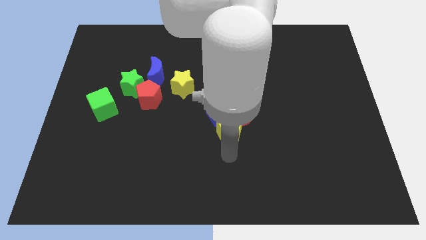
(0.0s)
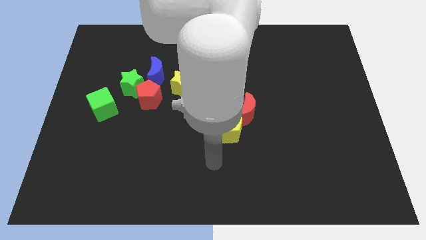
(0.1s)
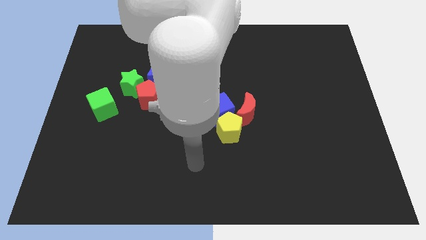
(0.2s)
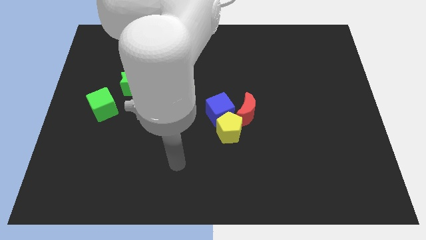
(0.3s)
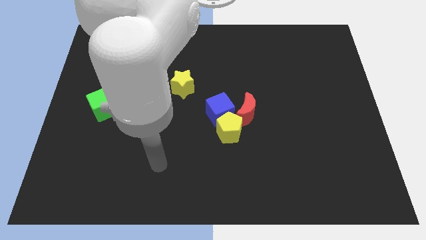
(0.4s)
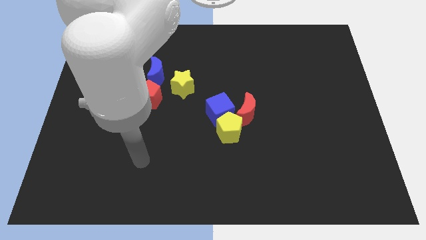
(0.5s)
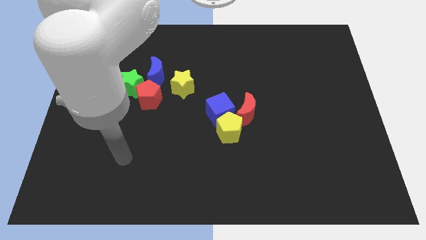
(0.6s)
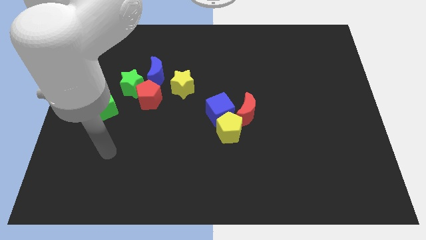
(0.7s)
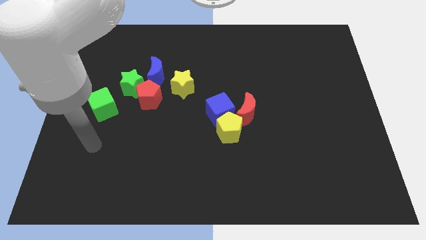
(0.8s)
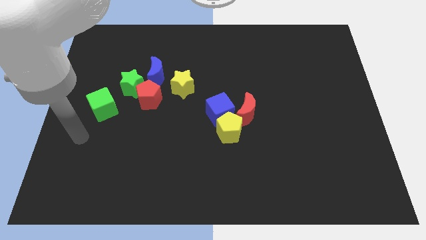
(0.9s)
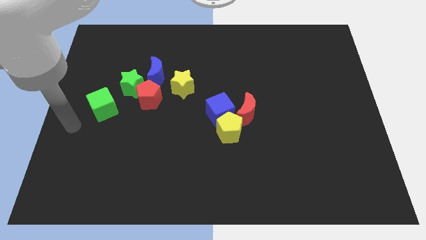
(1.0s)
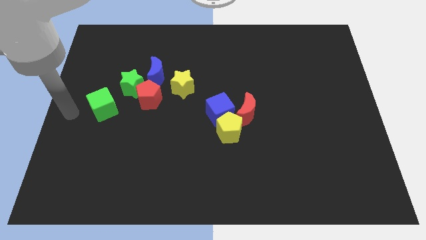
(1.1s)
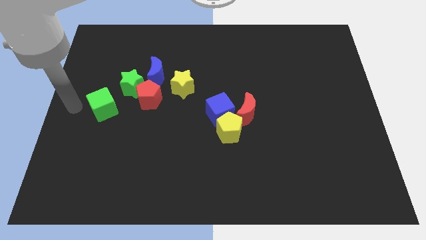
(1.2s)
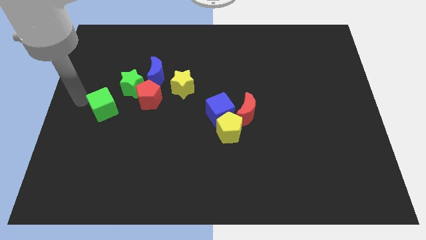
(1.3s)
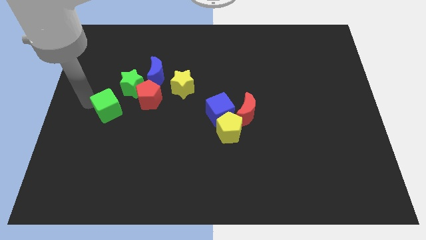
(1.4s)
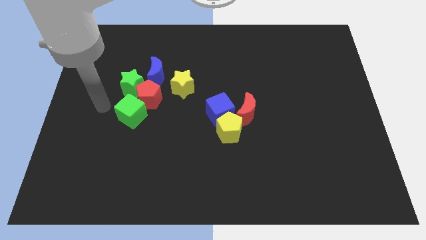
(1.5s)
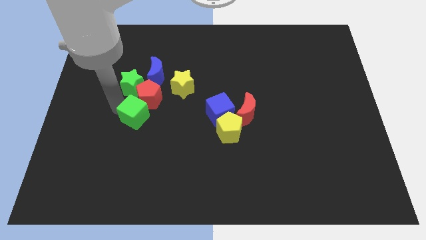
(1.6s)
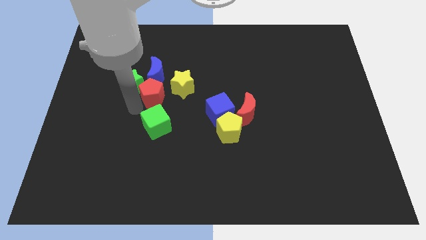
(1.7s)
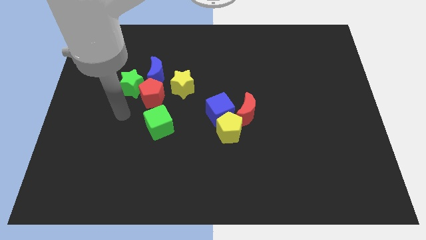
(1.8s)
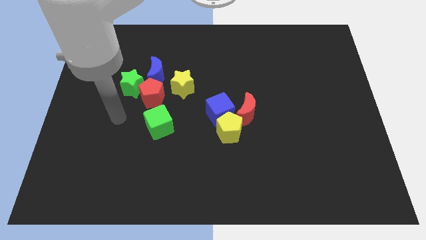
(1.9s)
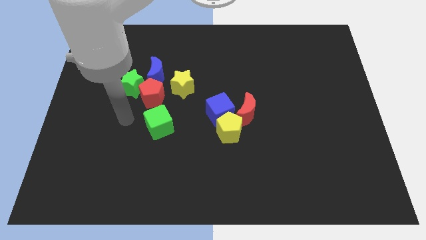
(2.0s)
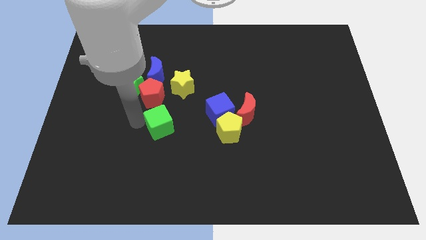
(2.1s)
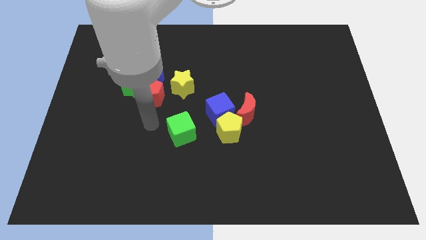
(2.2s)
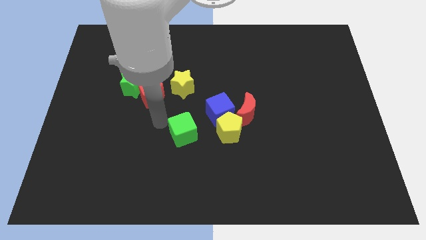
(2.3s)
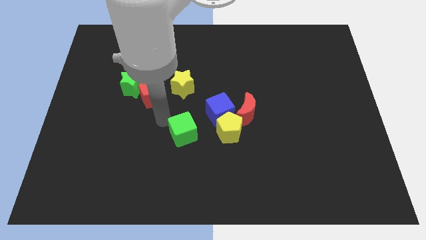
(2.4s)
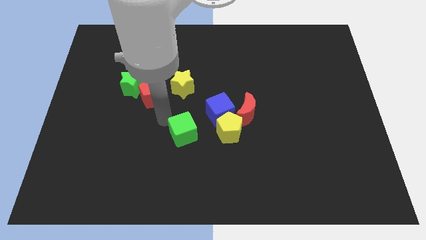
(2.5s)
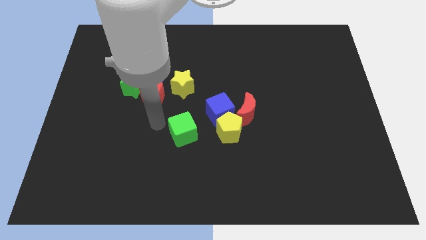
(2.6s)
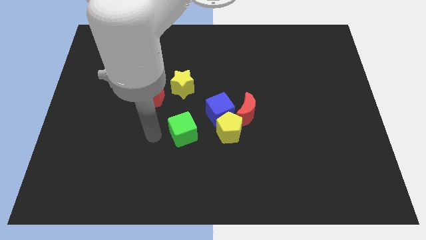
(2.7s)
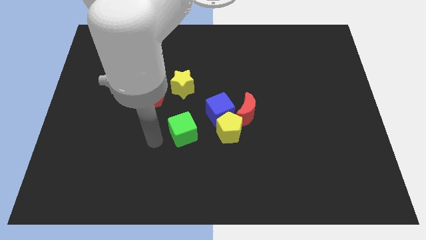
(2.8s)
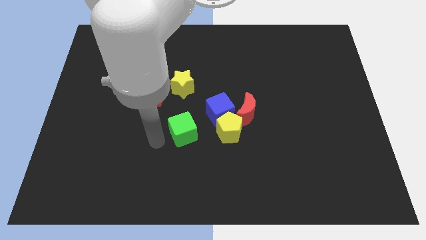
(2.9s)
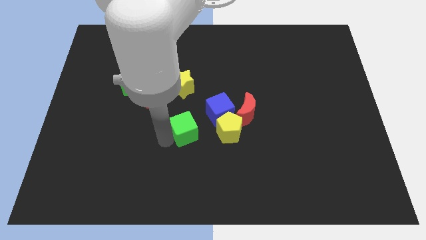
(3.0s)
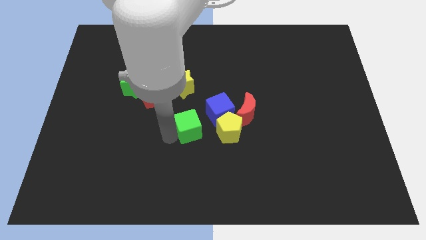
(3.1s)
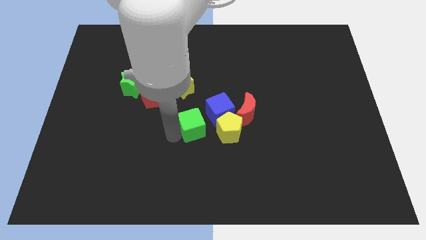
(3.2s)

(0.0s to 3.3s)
move the green cube towards the group of blocks

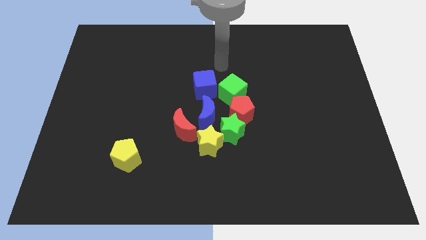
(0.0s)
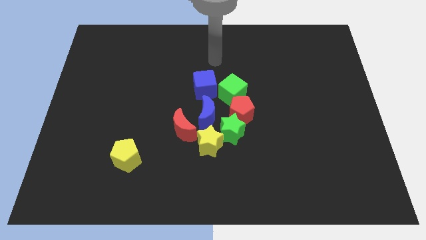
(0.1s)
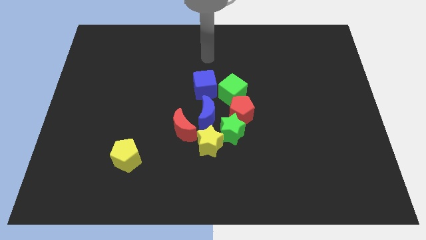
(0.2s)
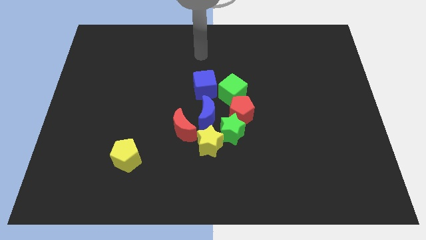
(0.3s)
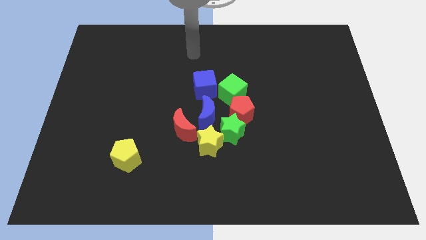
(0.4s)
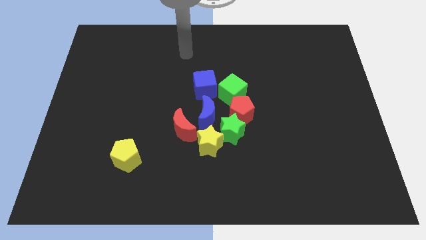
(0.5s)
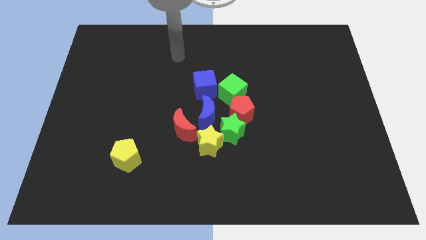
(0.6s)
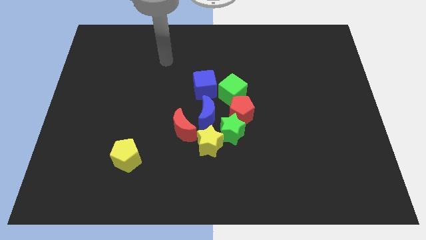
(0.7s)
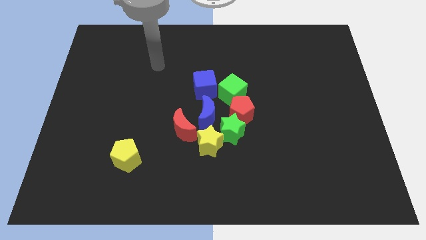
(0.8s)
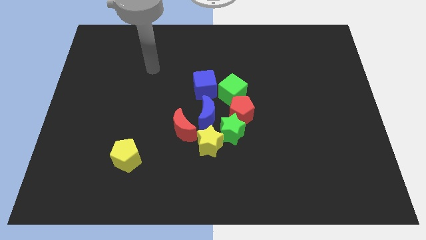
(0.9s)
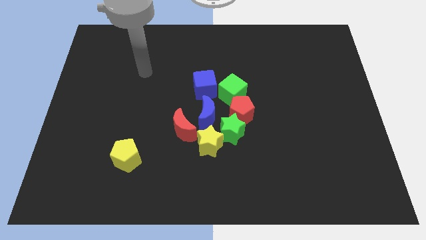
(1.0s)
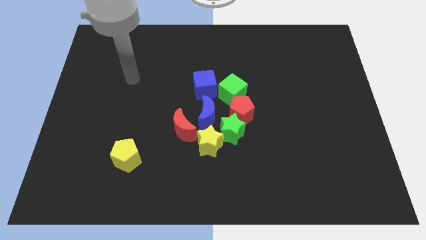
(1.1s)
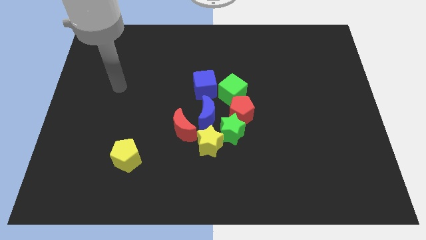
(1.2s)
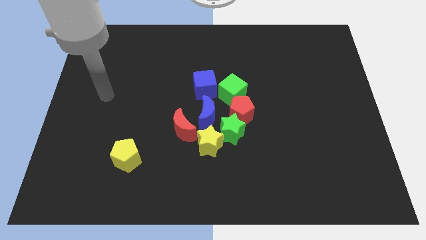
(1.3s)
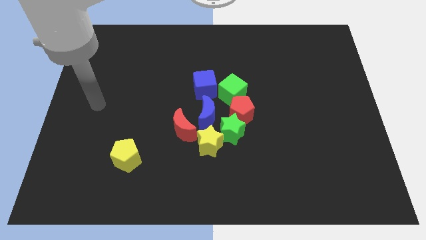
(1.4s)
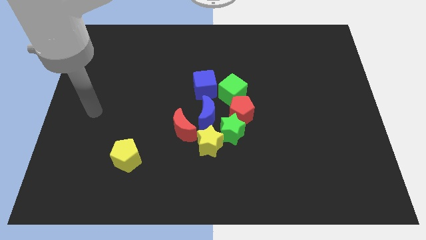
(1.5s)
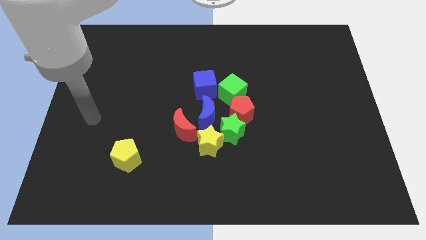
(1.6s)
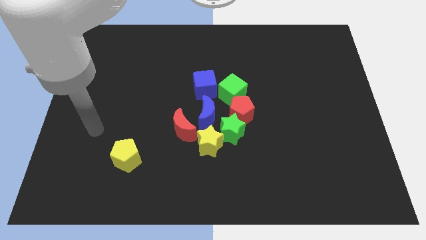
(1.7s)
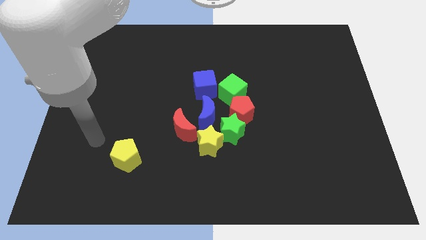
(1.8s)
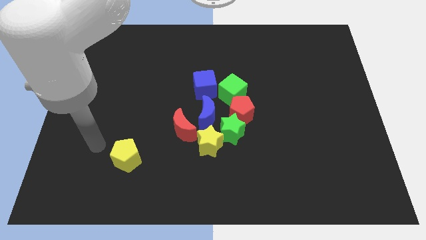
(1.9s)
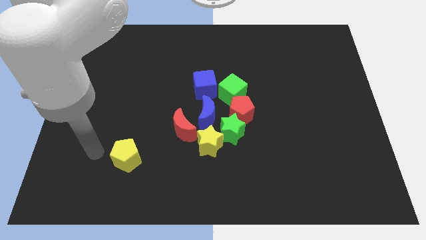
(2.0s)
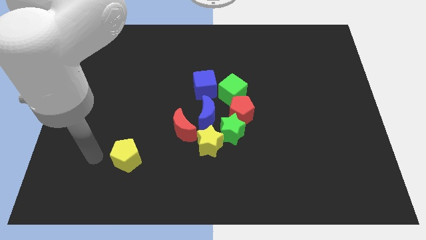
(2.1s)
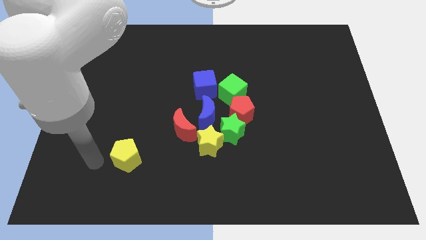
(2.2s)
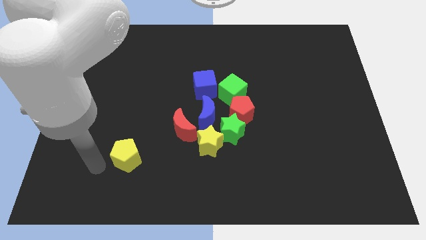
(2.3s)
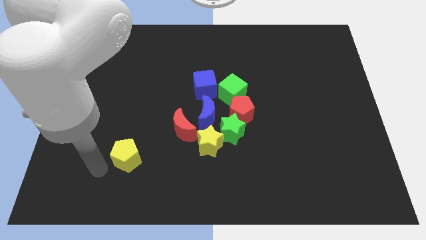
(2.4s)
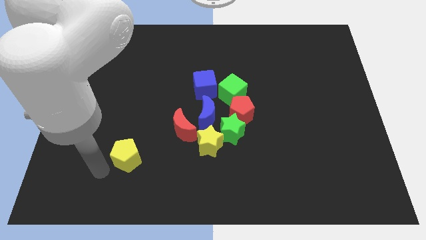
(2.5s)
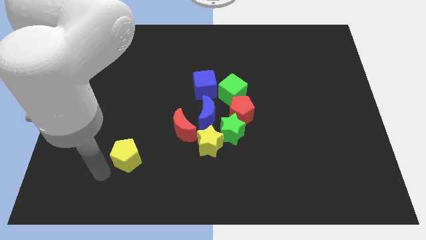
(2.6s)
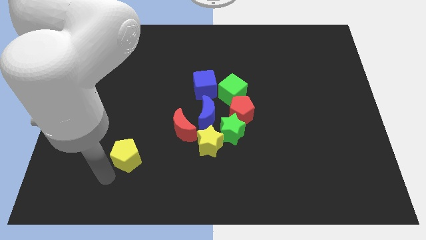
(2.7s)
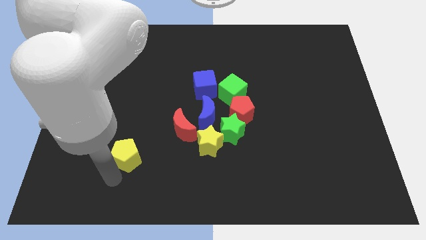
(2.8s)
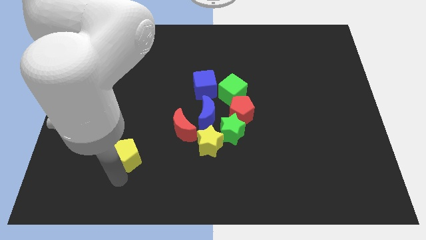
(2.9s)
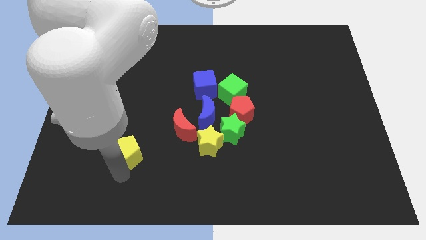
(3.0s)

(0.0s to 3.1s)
tap the yellow pentagon of the board

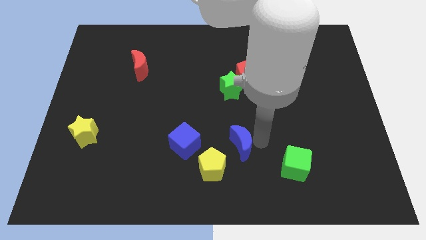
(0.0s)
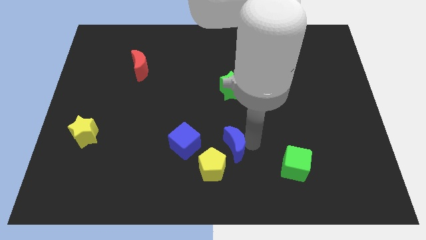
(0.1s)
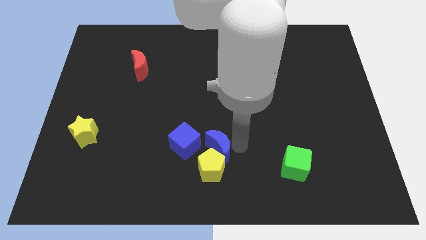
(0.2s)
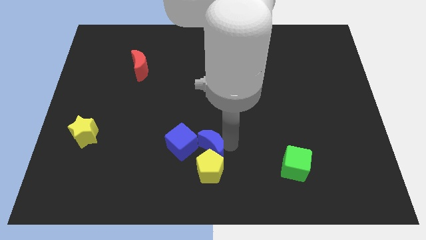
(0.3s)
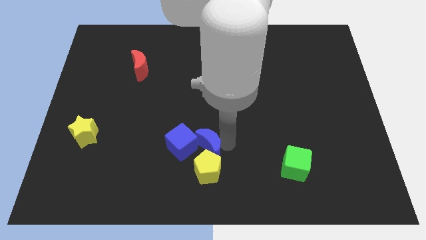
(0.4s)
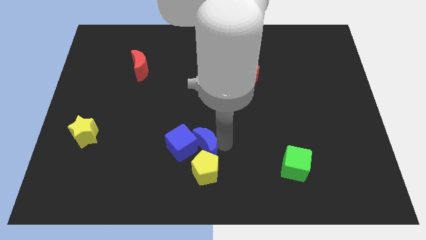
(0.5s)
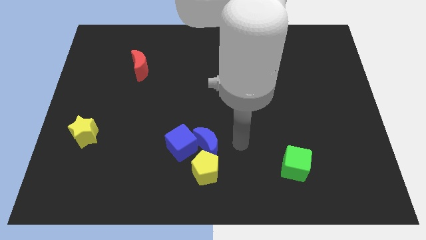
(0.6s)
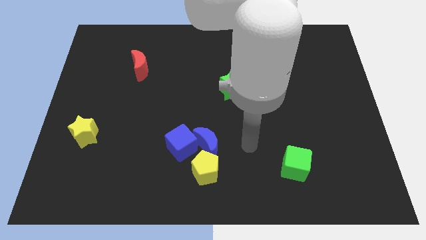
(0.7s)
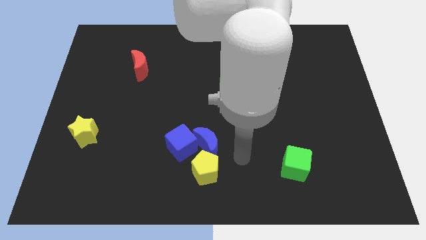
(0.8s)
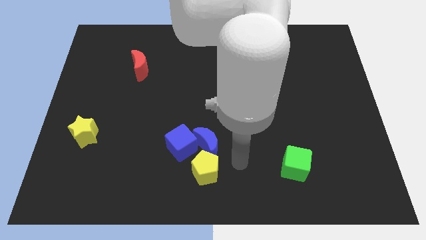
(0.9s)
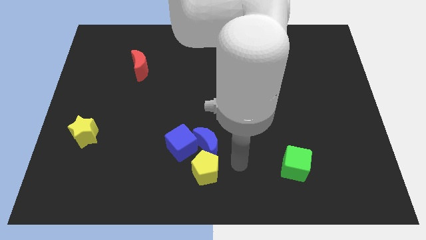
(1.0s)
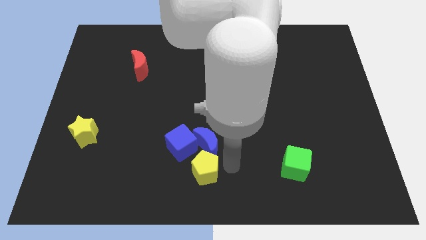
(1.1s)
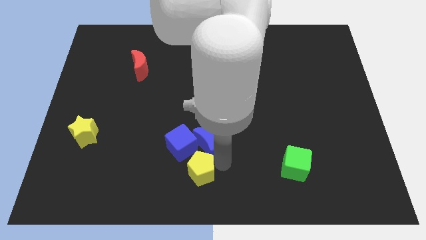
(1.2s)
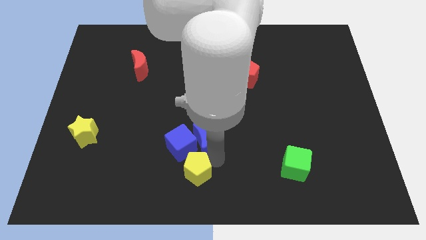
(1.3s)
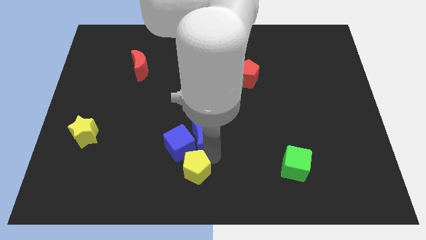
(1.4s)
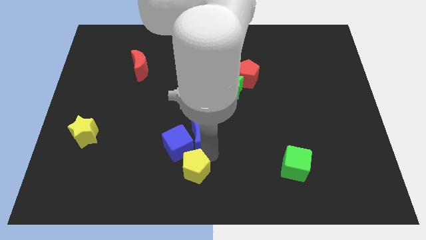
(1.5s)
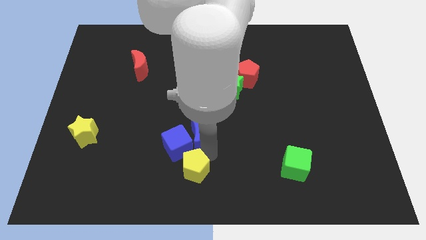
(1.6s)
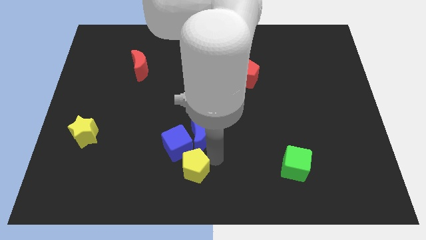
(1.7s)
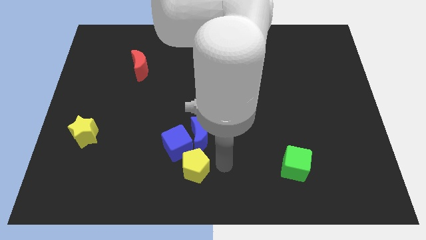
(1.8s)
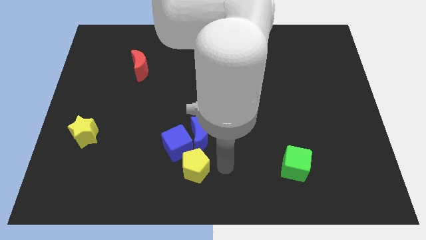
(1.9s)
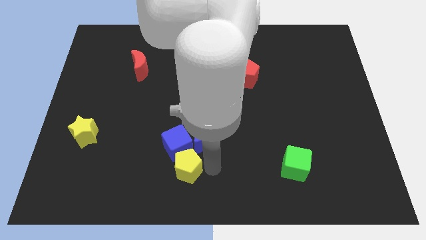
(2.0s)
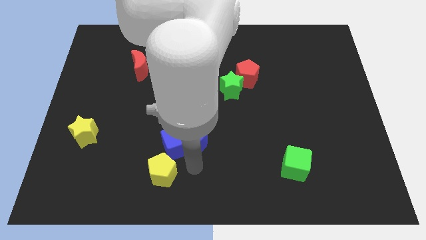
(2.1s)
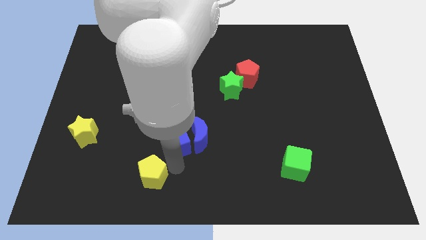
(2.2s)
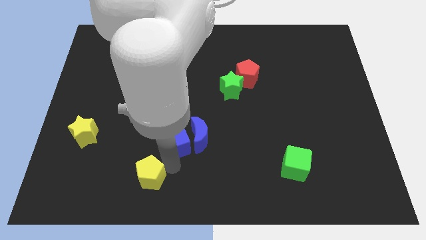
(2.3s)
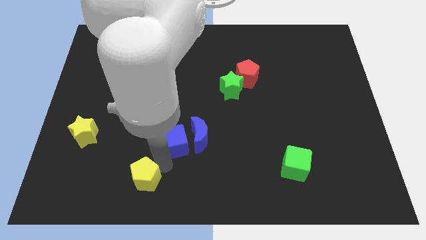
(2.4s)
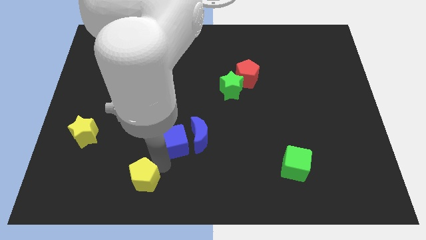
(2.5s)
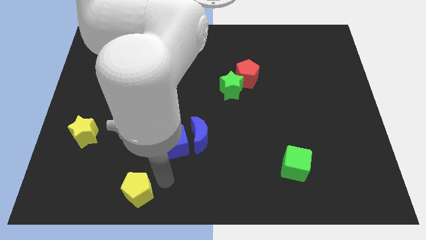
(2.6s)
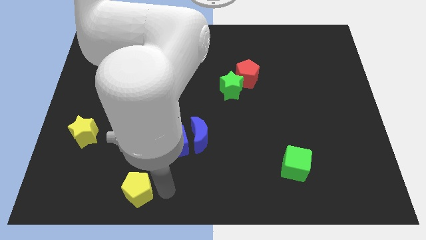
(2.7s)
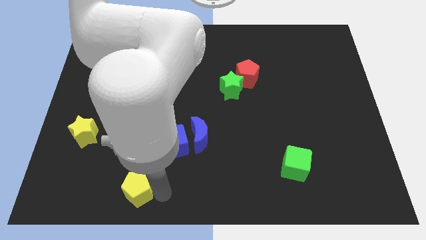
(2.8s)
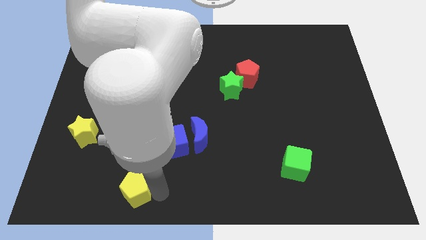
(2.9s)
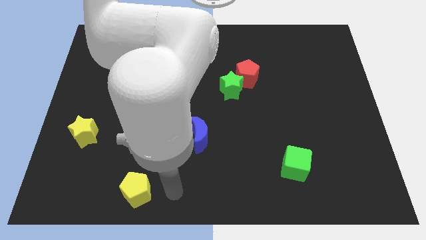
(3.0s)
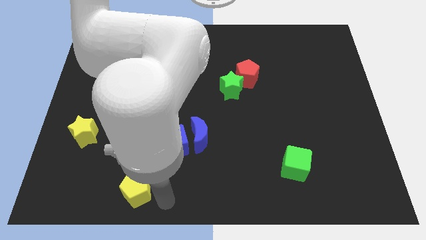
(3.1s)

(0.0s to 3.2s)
place the yellow pentagon towards the bottom
